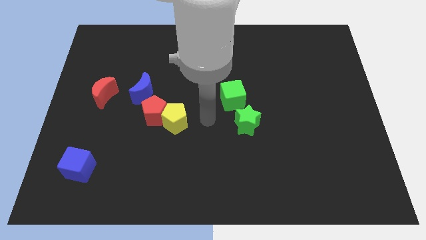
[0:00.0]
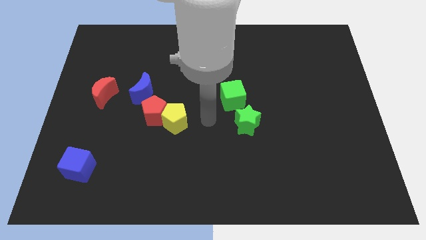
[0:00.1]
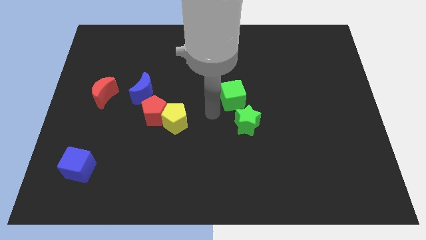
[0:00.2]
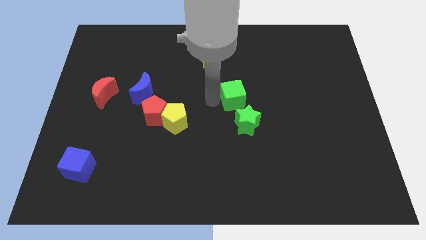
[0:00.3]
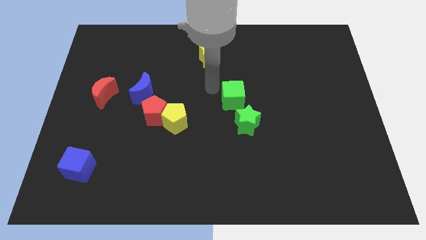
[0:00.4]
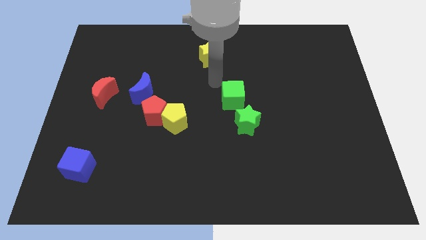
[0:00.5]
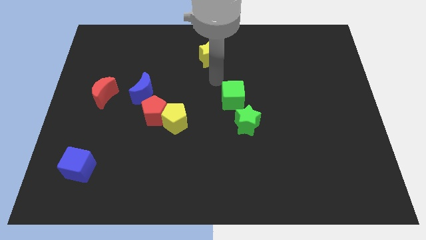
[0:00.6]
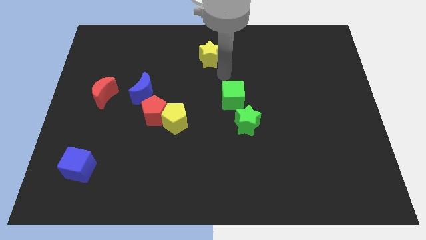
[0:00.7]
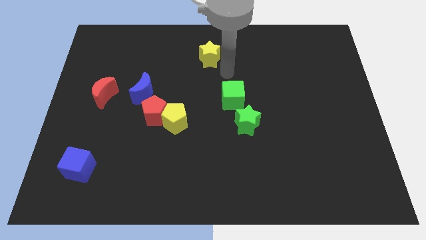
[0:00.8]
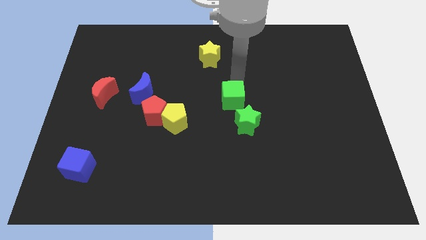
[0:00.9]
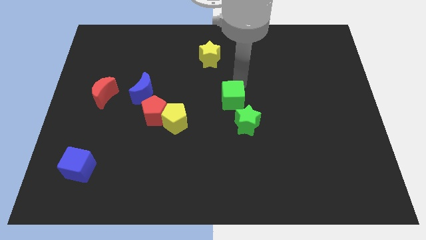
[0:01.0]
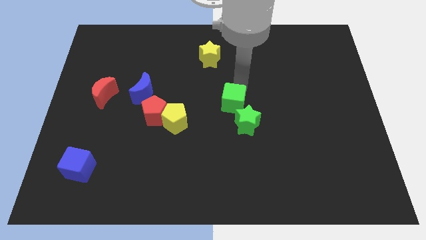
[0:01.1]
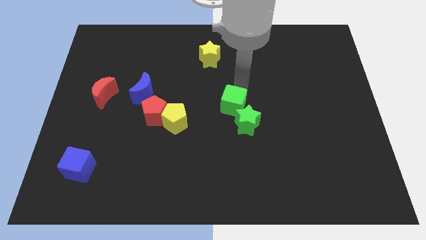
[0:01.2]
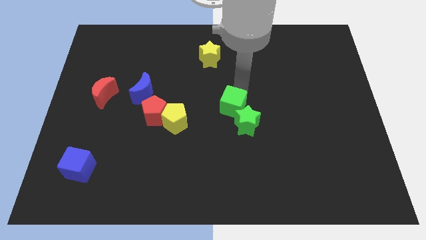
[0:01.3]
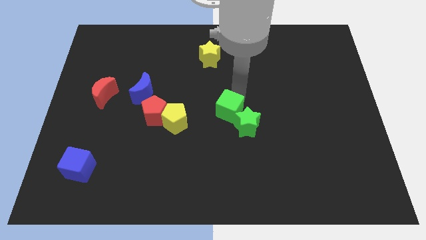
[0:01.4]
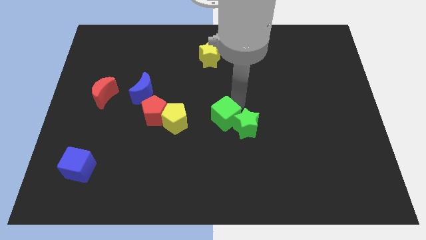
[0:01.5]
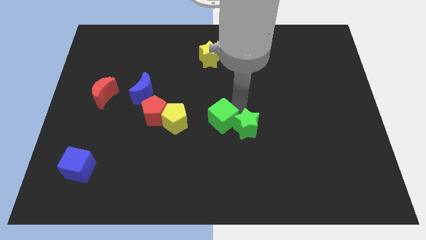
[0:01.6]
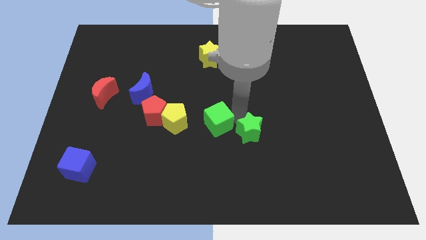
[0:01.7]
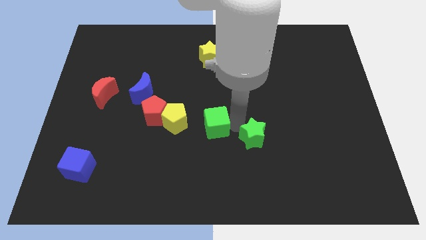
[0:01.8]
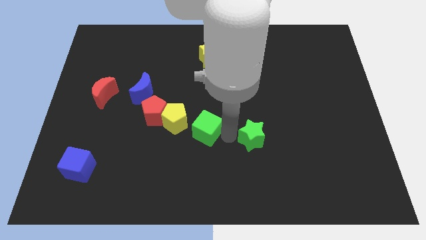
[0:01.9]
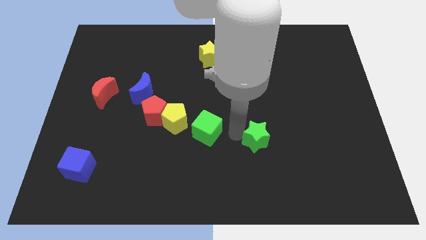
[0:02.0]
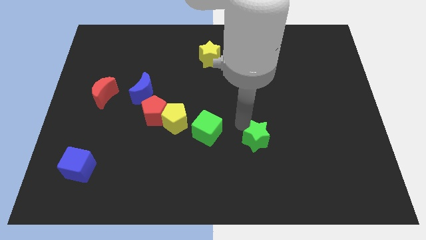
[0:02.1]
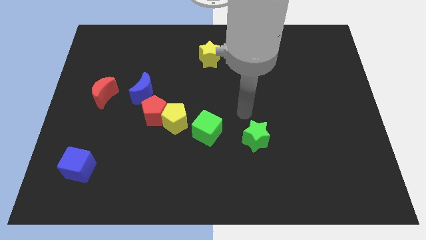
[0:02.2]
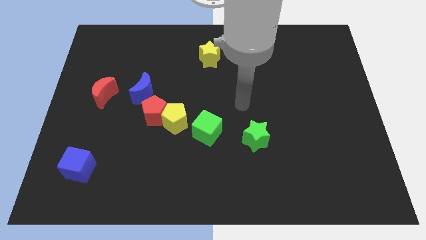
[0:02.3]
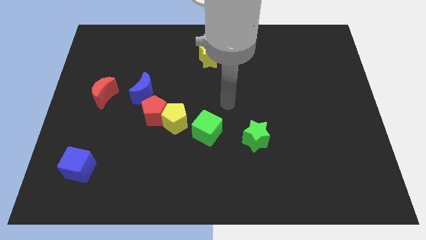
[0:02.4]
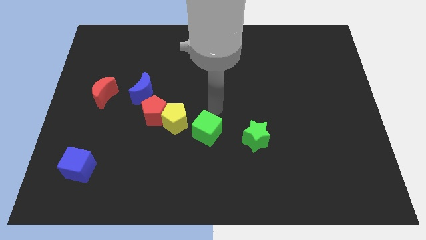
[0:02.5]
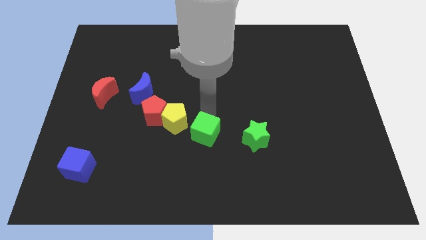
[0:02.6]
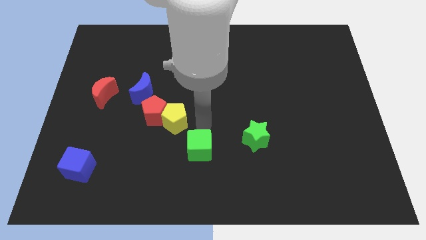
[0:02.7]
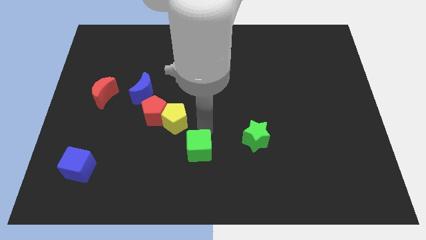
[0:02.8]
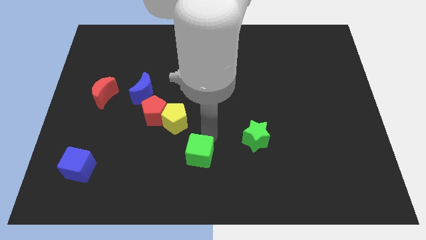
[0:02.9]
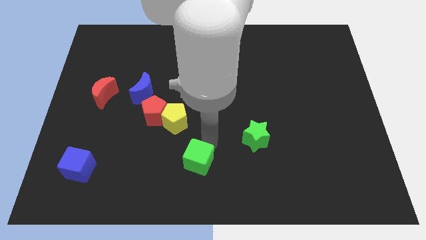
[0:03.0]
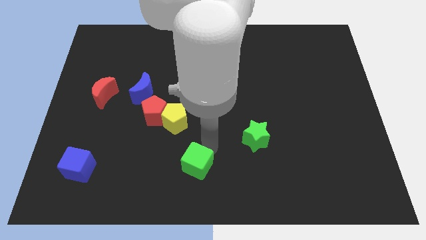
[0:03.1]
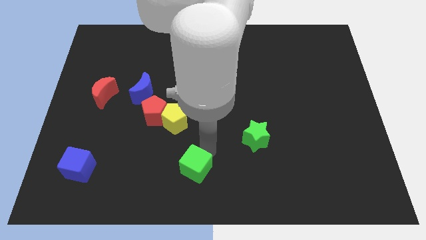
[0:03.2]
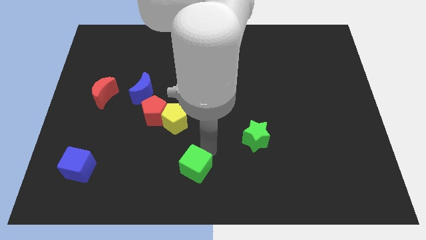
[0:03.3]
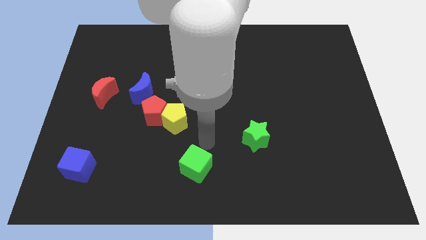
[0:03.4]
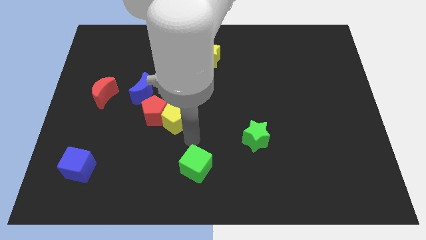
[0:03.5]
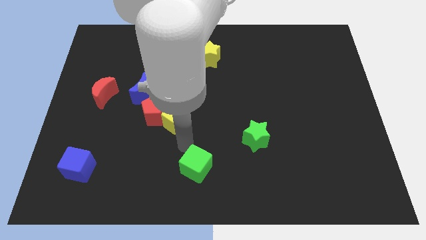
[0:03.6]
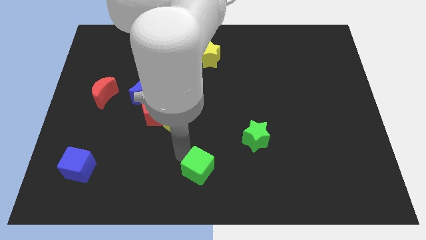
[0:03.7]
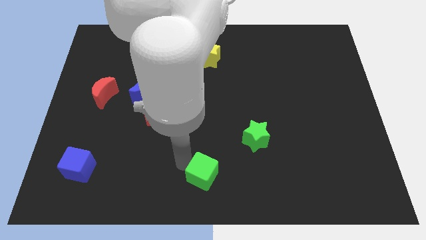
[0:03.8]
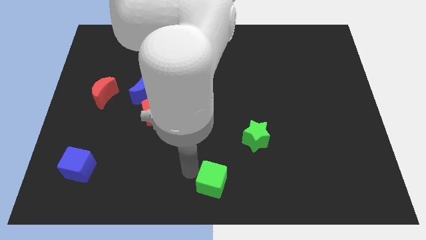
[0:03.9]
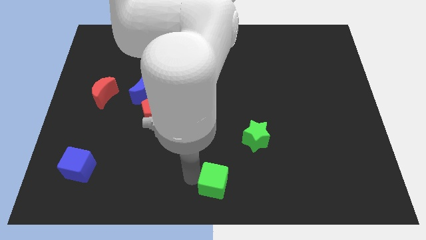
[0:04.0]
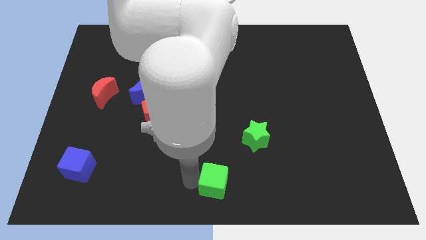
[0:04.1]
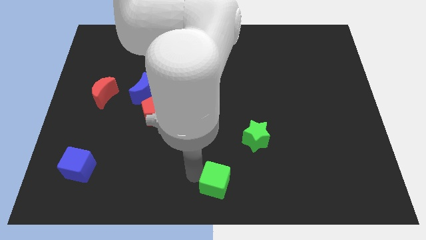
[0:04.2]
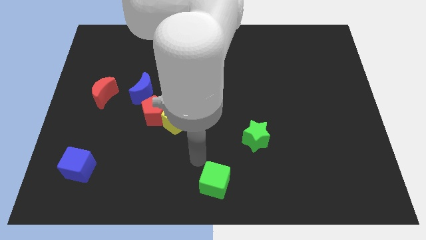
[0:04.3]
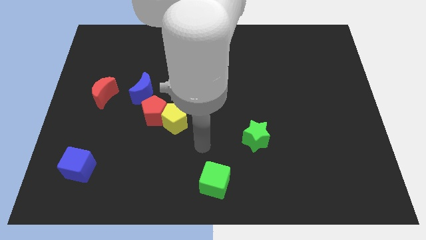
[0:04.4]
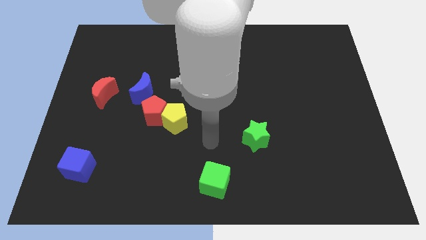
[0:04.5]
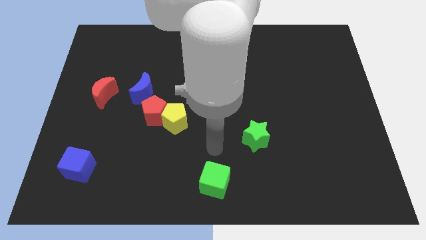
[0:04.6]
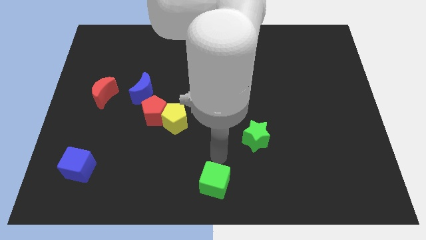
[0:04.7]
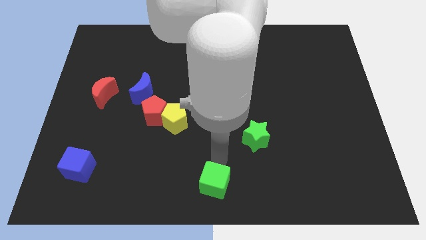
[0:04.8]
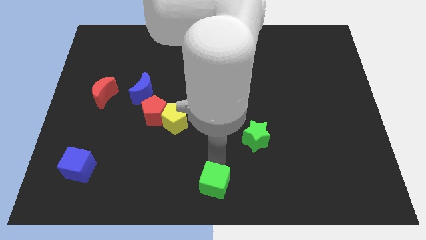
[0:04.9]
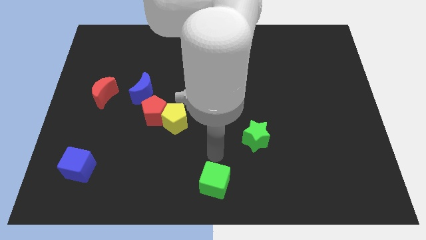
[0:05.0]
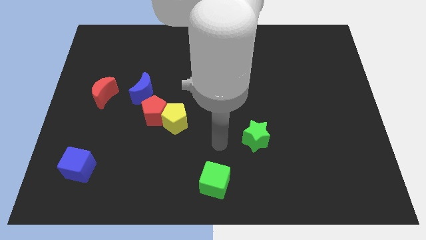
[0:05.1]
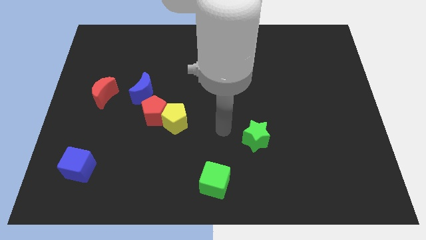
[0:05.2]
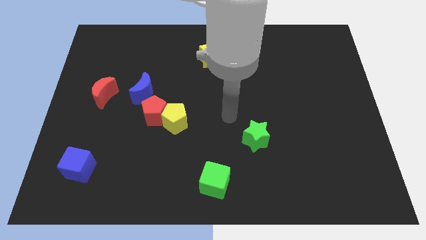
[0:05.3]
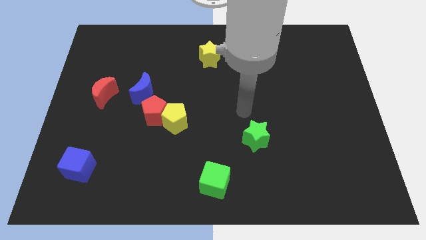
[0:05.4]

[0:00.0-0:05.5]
move the green cube to the bottom center on the board

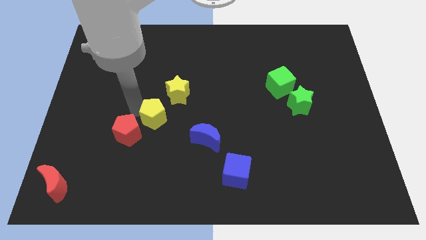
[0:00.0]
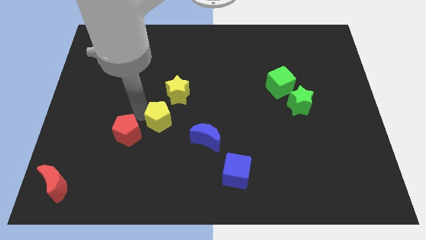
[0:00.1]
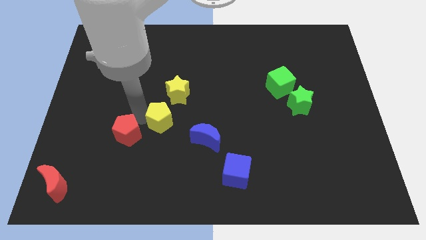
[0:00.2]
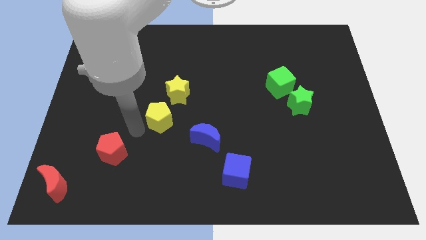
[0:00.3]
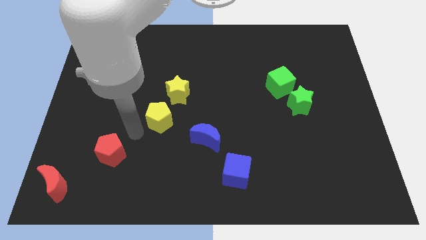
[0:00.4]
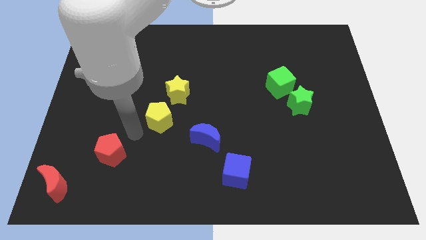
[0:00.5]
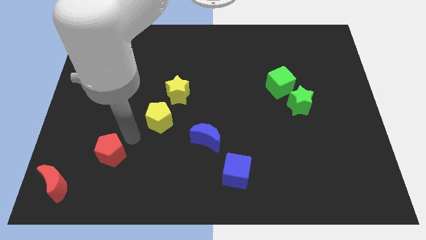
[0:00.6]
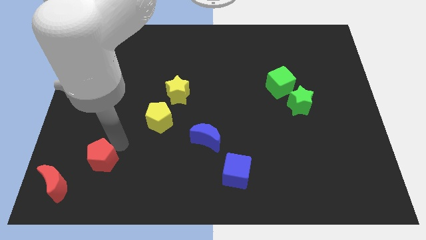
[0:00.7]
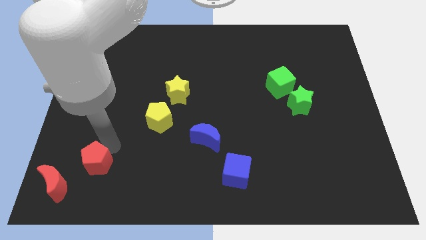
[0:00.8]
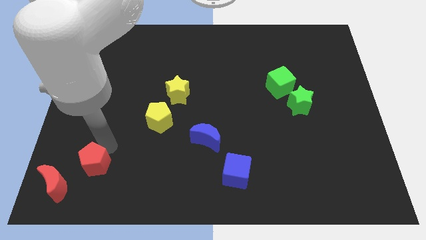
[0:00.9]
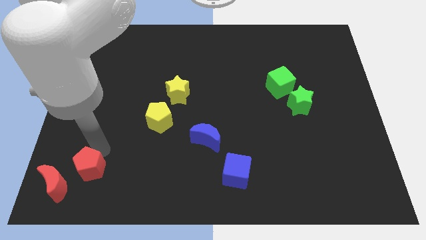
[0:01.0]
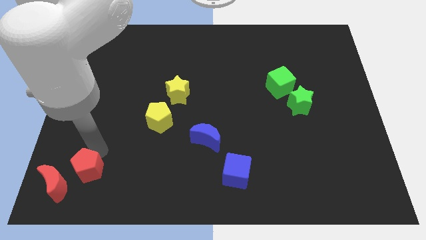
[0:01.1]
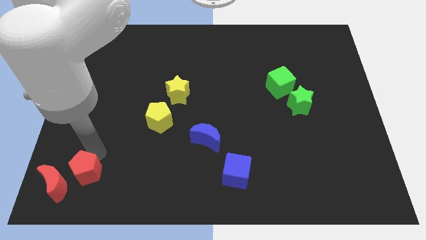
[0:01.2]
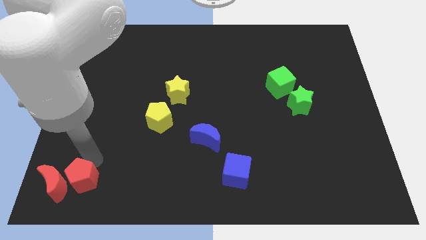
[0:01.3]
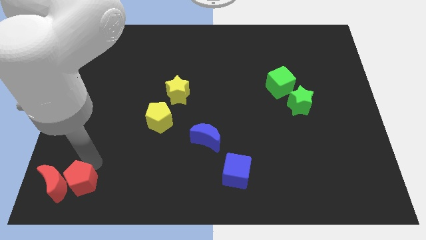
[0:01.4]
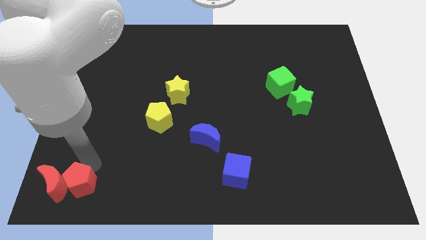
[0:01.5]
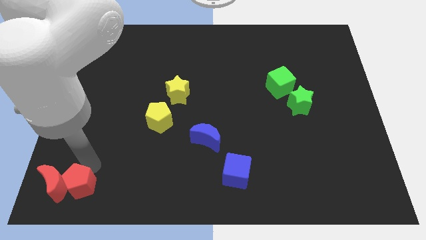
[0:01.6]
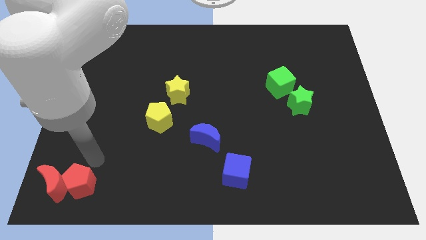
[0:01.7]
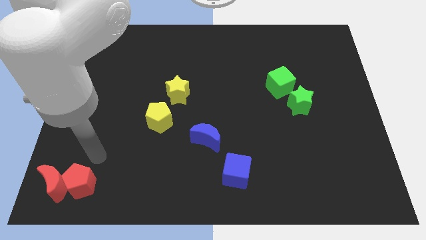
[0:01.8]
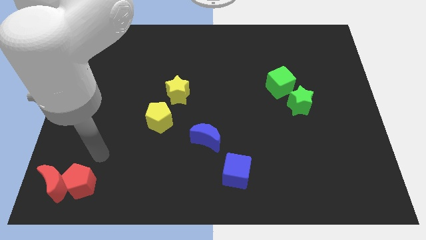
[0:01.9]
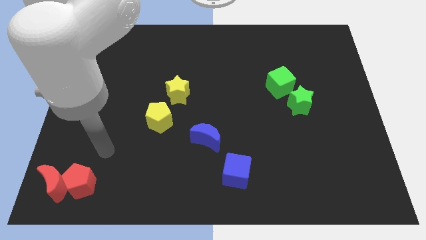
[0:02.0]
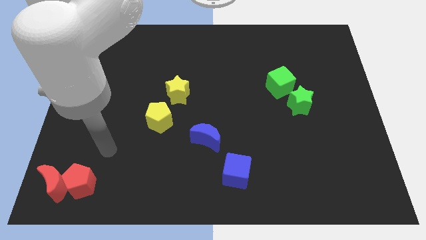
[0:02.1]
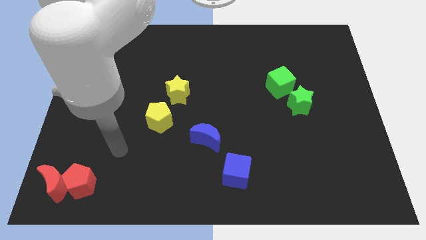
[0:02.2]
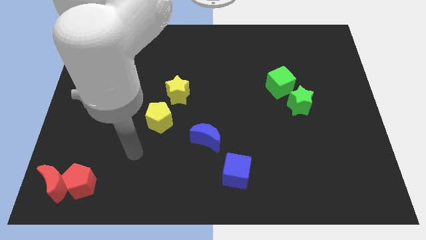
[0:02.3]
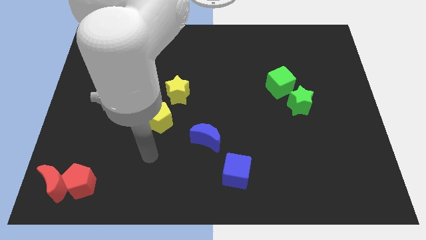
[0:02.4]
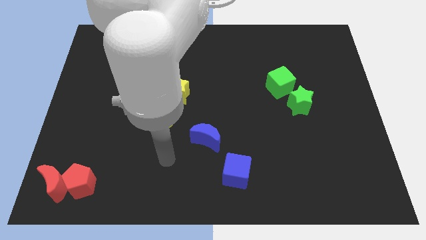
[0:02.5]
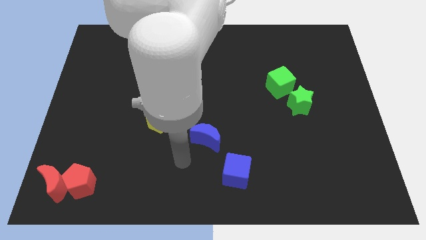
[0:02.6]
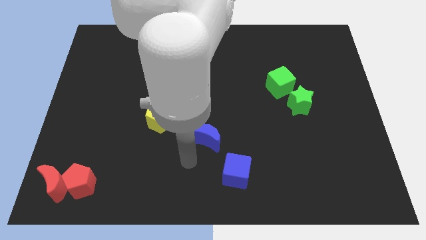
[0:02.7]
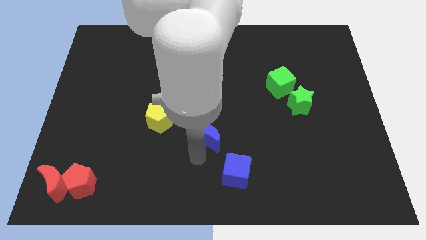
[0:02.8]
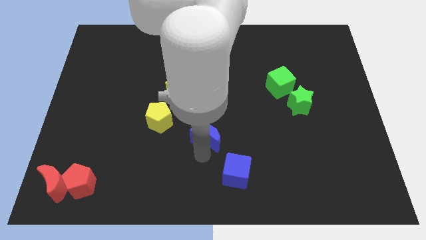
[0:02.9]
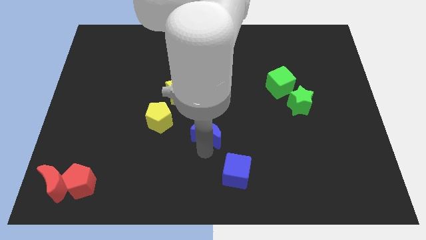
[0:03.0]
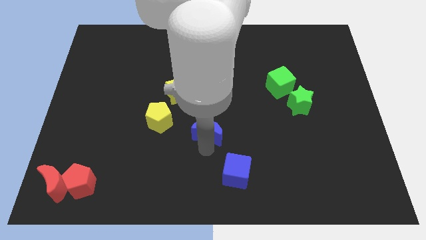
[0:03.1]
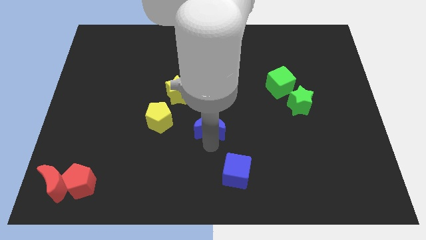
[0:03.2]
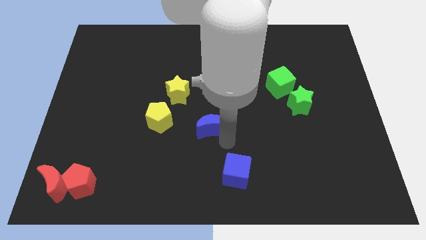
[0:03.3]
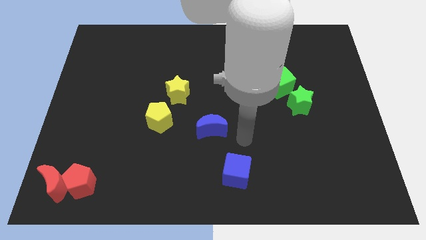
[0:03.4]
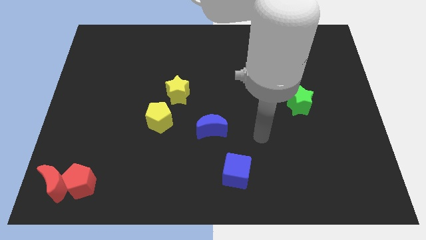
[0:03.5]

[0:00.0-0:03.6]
place the blue moon right to the yellow pentagon
